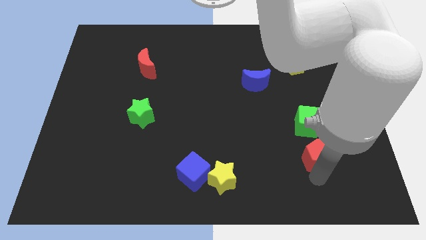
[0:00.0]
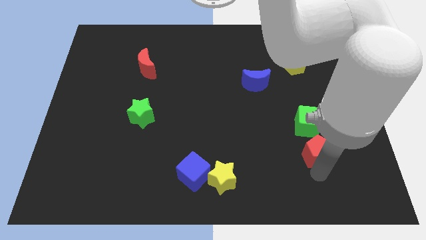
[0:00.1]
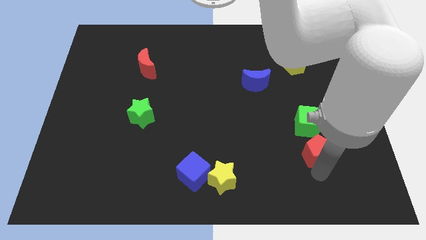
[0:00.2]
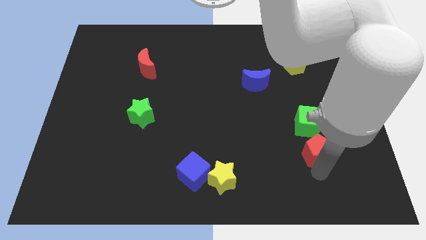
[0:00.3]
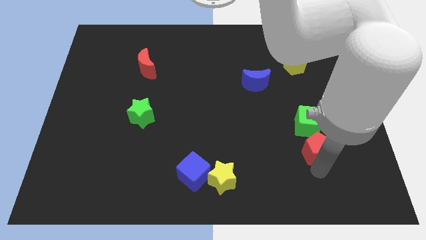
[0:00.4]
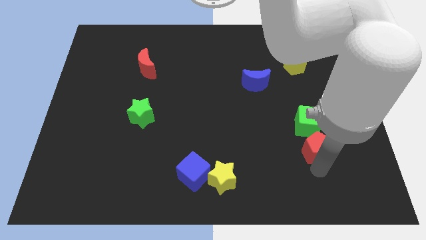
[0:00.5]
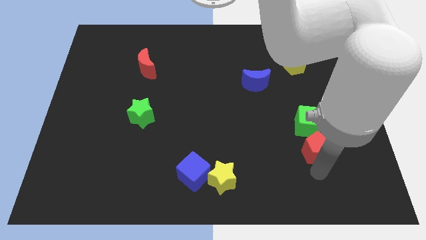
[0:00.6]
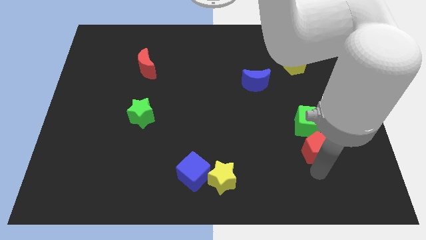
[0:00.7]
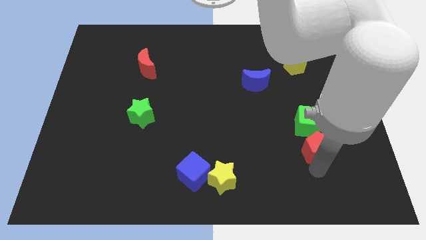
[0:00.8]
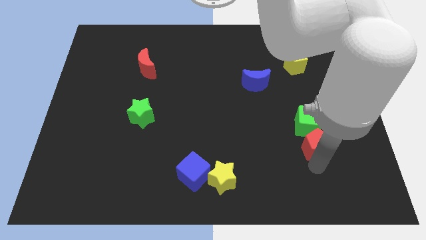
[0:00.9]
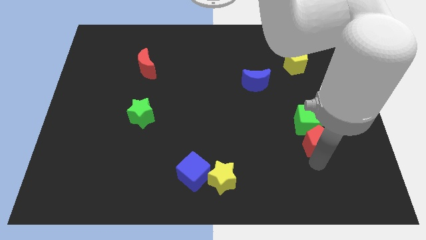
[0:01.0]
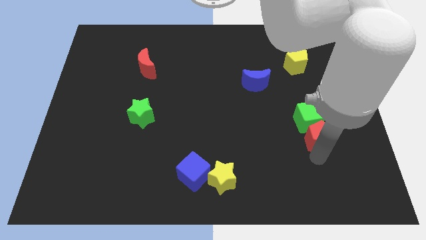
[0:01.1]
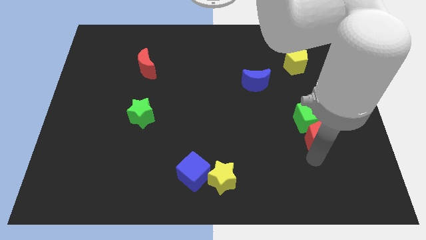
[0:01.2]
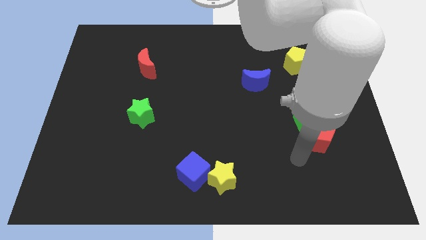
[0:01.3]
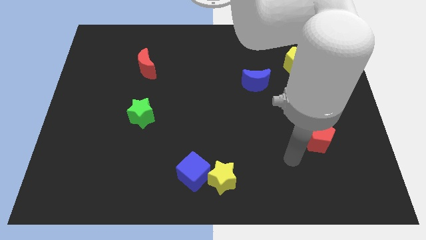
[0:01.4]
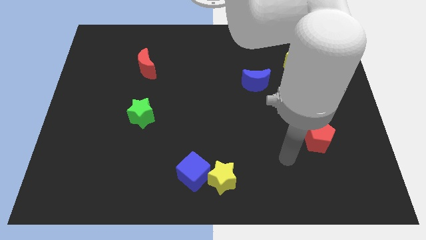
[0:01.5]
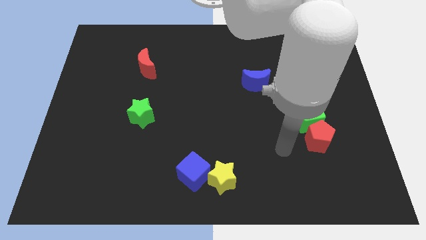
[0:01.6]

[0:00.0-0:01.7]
move the red pentagon into the green cube

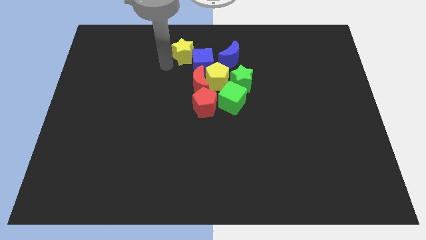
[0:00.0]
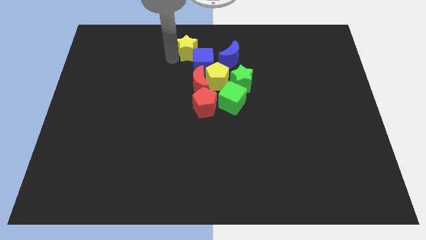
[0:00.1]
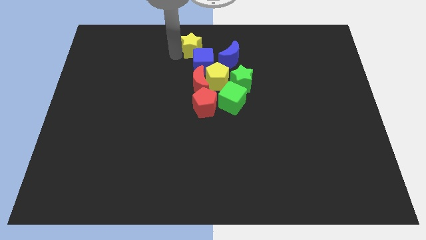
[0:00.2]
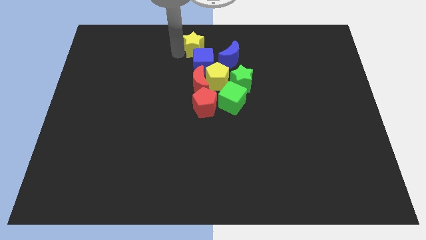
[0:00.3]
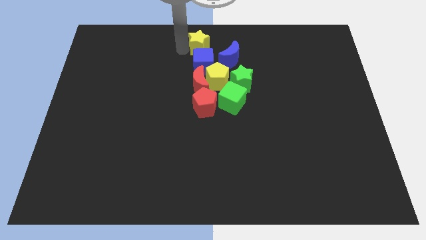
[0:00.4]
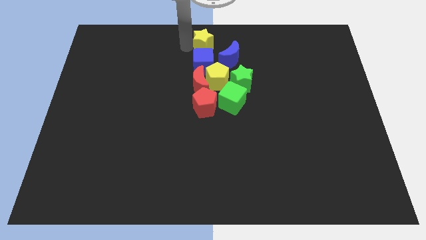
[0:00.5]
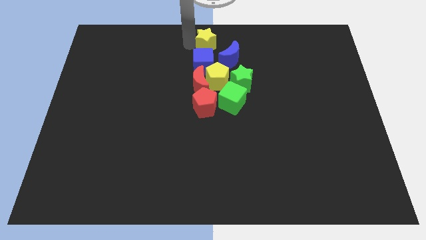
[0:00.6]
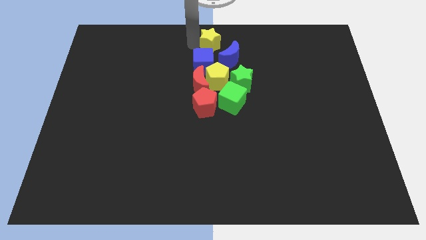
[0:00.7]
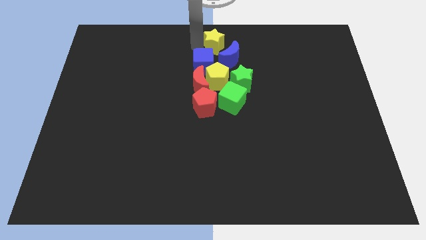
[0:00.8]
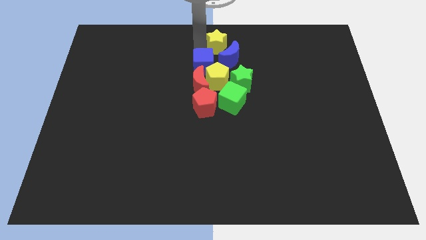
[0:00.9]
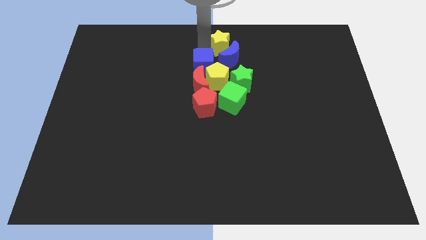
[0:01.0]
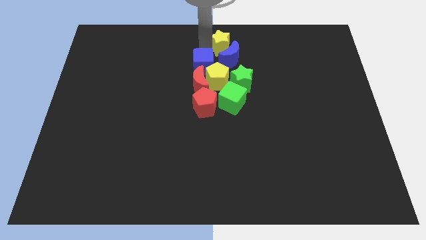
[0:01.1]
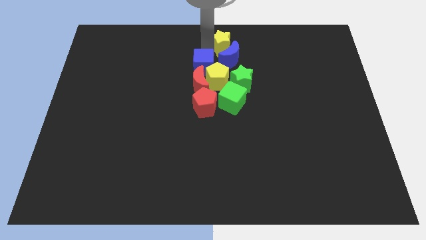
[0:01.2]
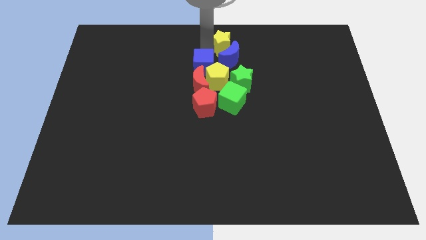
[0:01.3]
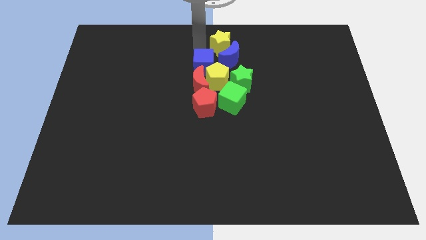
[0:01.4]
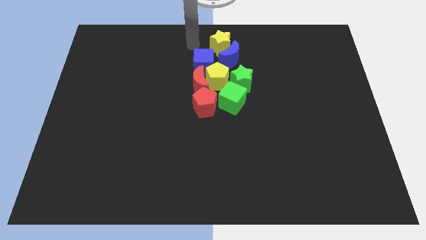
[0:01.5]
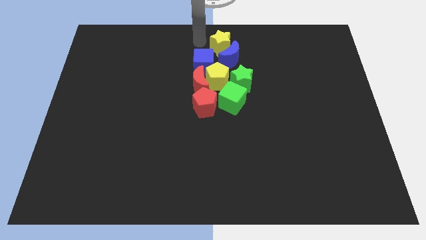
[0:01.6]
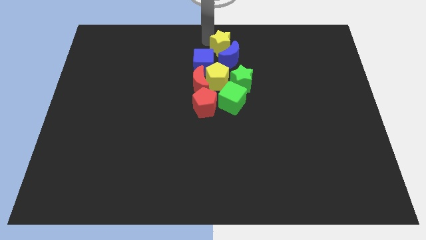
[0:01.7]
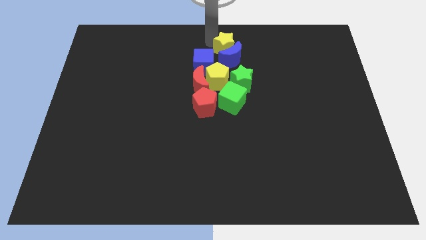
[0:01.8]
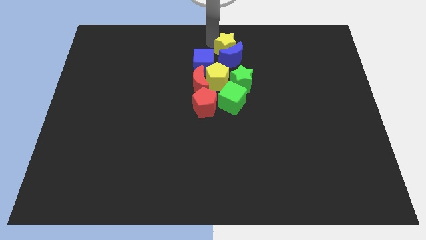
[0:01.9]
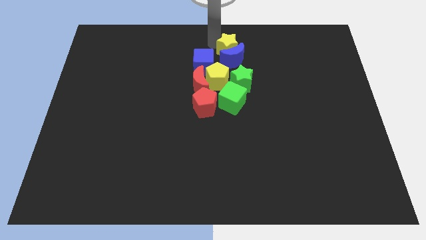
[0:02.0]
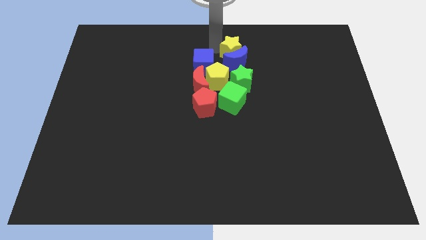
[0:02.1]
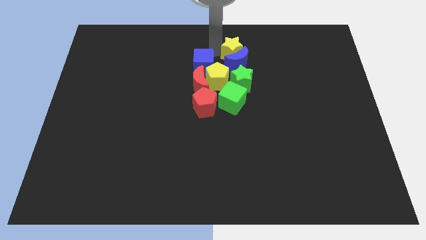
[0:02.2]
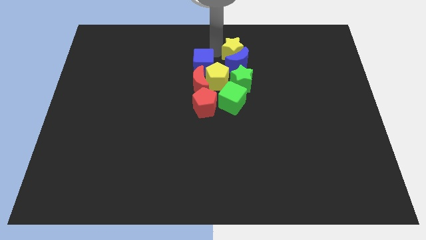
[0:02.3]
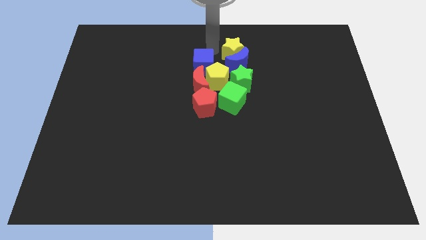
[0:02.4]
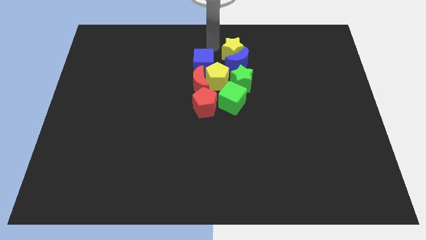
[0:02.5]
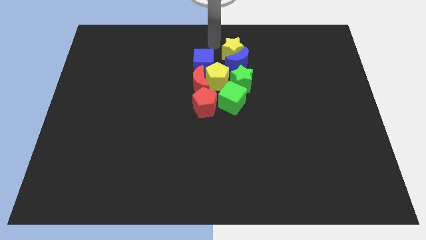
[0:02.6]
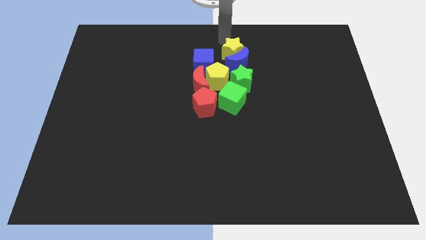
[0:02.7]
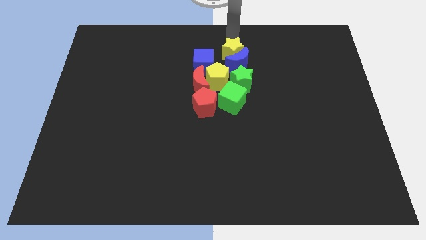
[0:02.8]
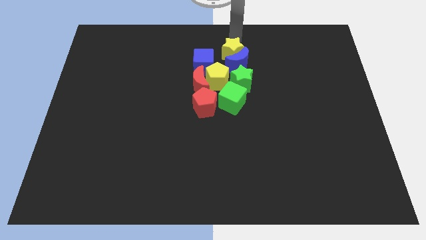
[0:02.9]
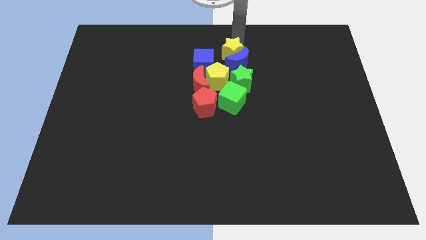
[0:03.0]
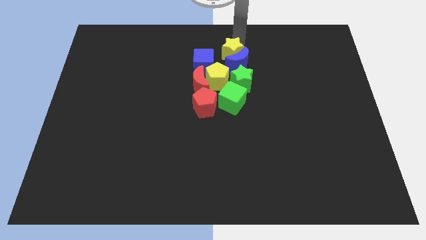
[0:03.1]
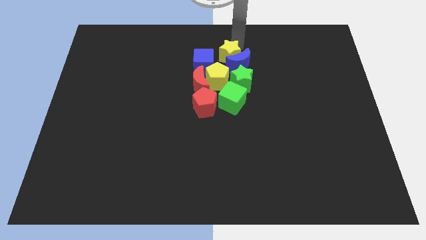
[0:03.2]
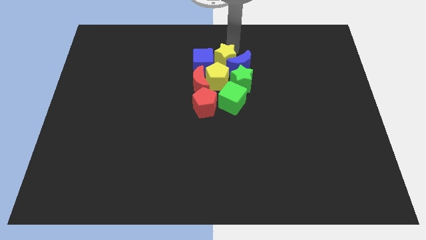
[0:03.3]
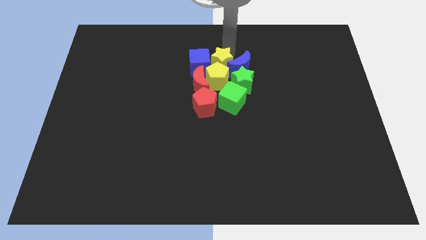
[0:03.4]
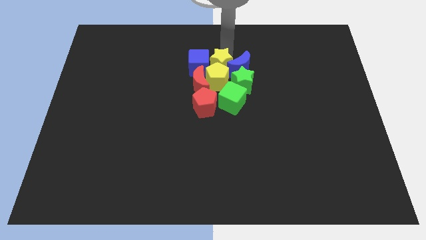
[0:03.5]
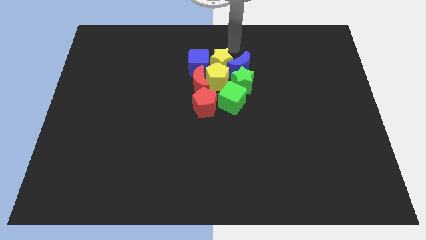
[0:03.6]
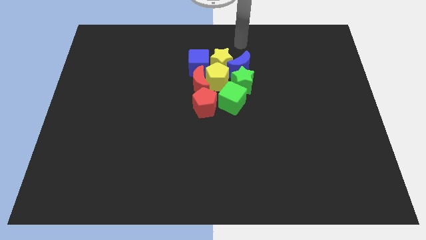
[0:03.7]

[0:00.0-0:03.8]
drag the yellow star into the group of blocks

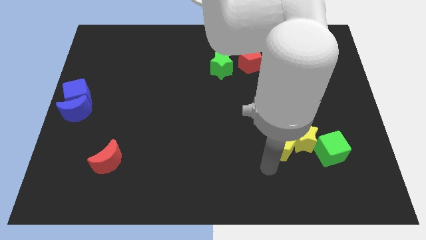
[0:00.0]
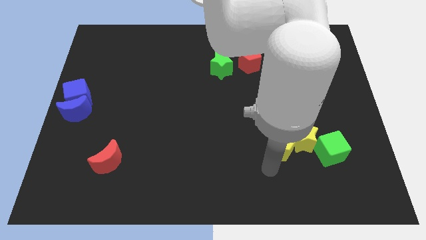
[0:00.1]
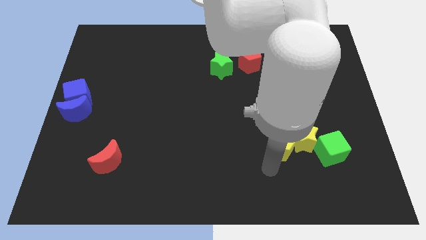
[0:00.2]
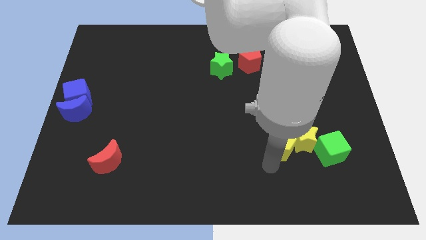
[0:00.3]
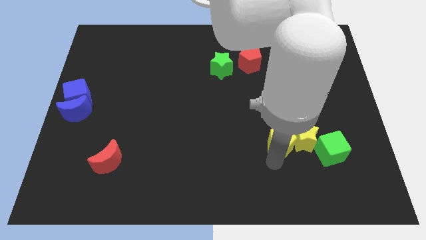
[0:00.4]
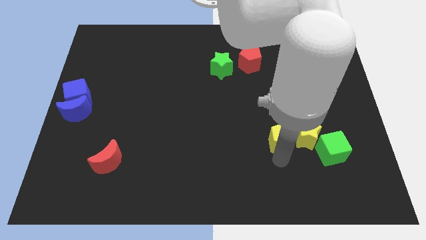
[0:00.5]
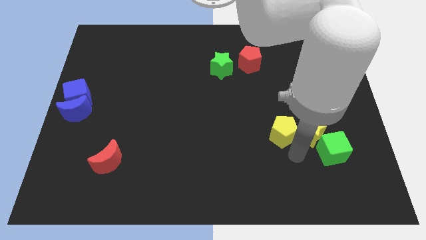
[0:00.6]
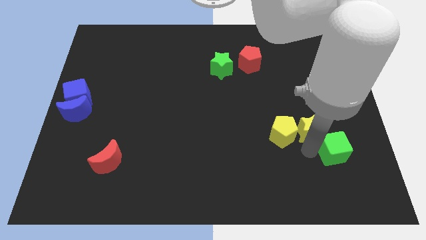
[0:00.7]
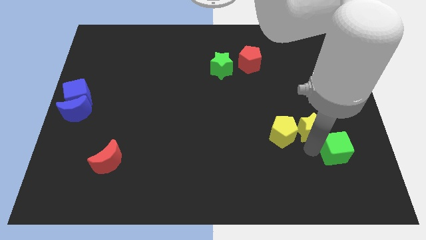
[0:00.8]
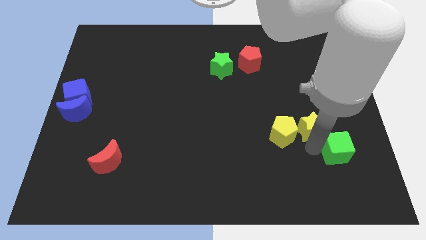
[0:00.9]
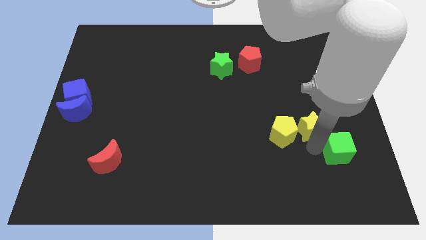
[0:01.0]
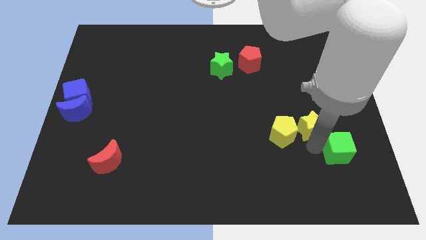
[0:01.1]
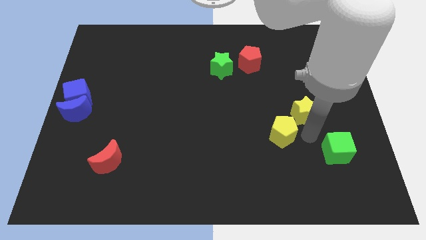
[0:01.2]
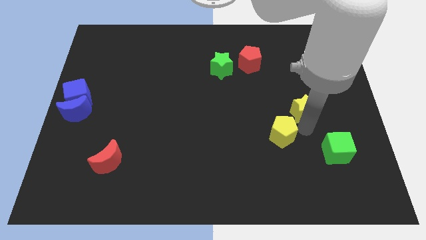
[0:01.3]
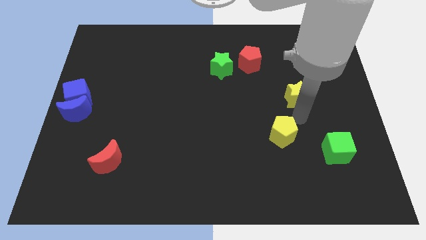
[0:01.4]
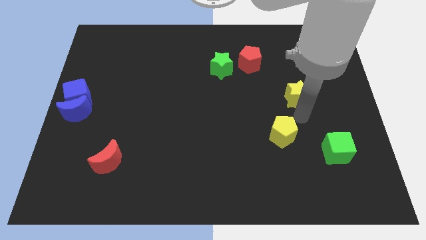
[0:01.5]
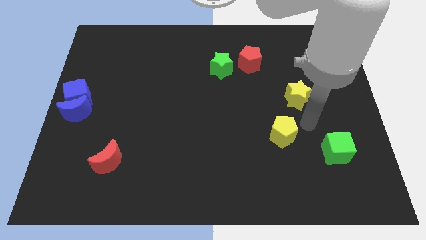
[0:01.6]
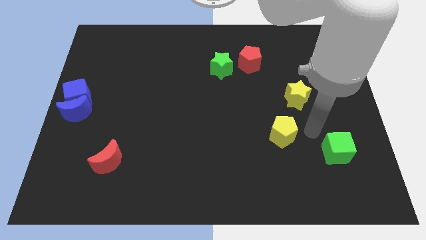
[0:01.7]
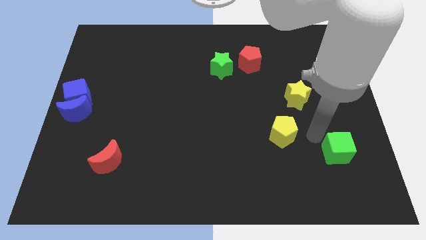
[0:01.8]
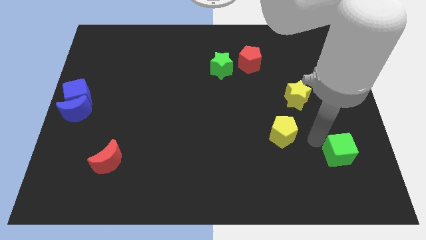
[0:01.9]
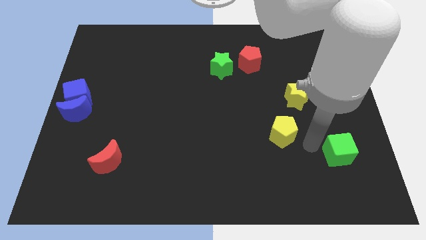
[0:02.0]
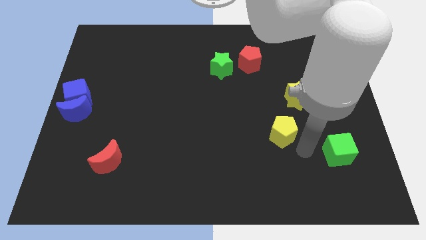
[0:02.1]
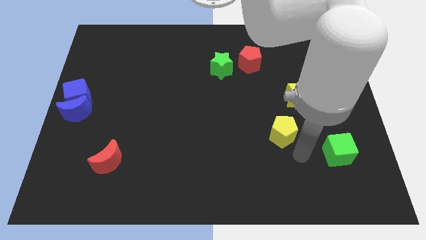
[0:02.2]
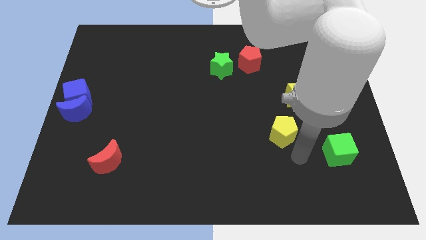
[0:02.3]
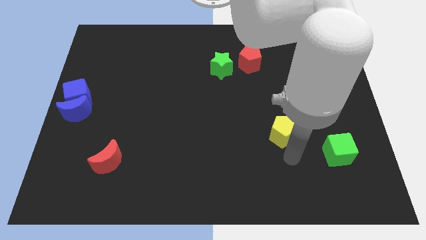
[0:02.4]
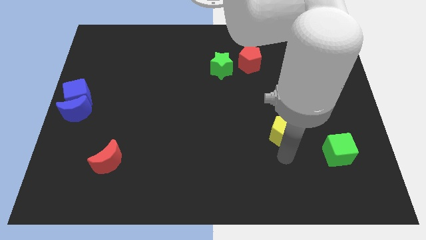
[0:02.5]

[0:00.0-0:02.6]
separate the yellow star from the yellow pentagon

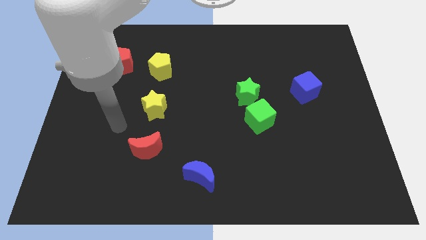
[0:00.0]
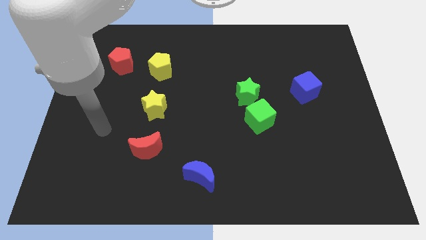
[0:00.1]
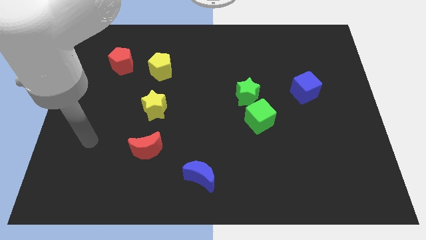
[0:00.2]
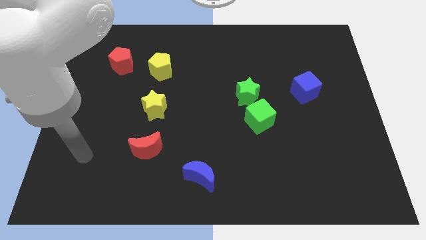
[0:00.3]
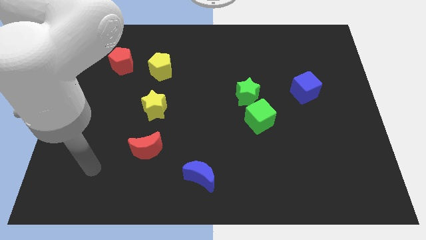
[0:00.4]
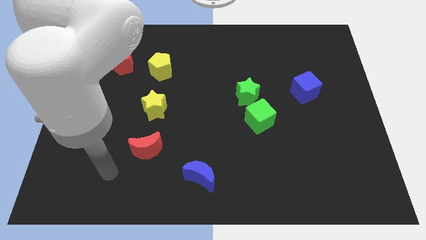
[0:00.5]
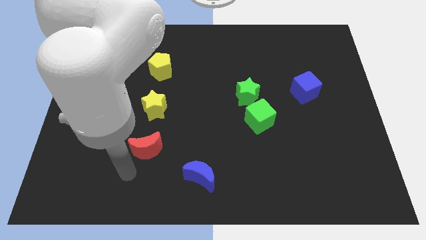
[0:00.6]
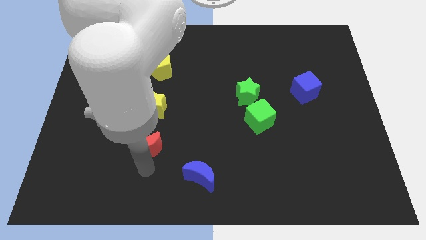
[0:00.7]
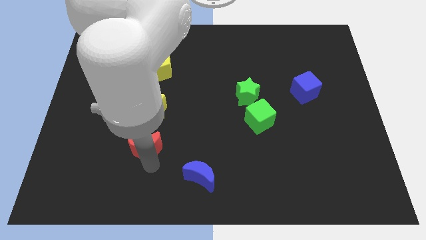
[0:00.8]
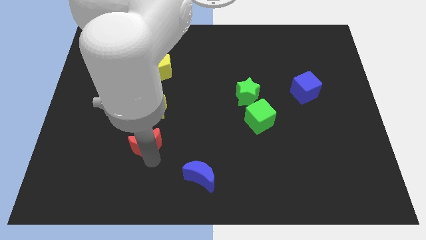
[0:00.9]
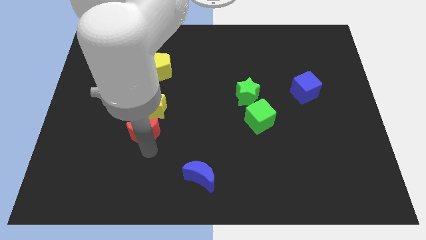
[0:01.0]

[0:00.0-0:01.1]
push the red crescent slightly to the top
